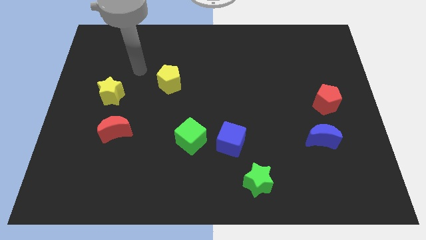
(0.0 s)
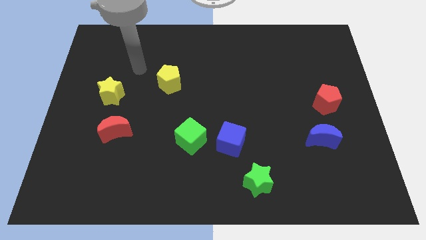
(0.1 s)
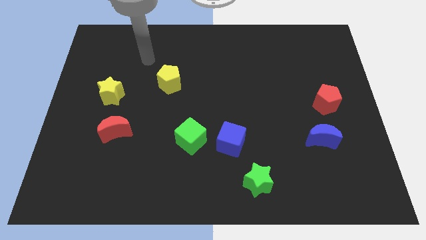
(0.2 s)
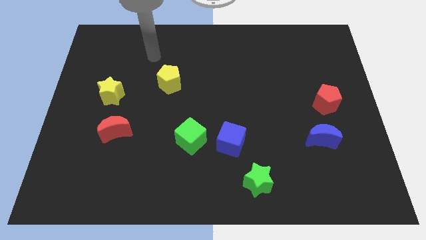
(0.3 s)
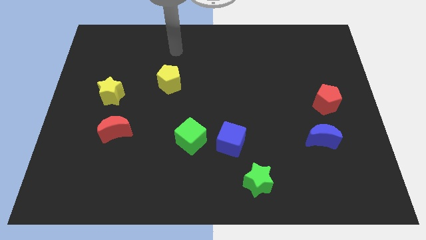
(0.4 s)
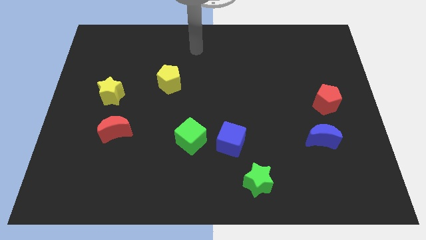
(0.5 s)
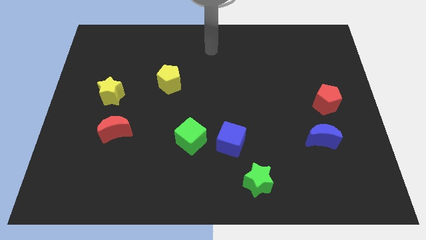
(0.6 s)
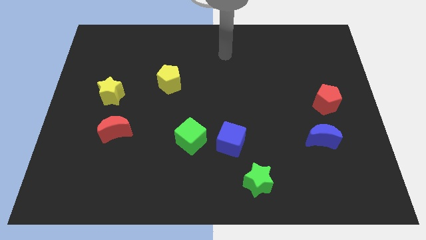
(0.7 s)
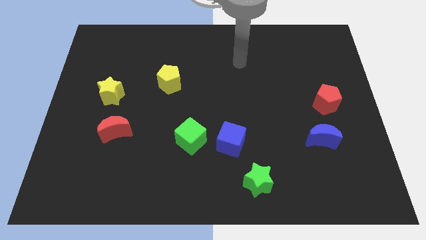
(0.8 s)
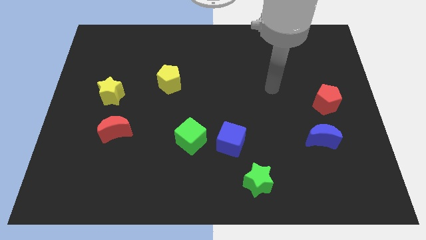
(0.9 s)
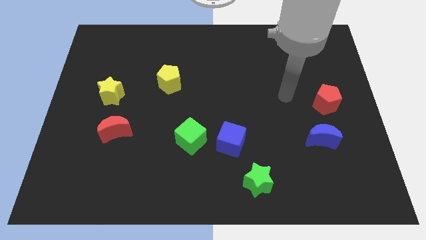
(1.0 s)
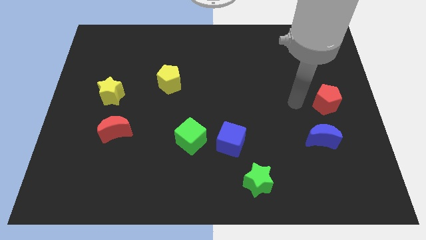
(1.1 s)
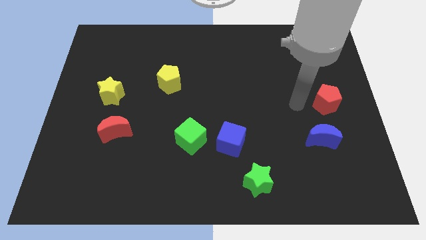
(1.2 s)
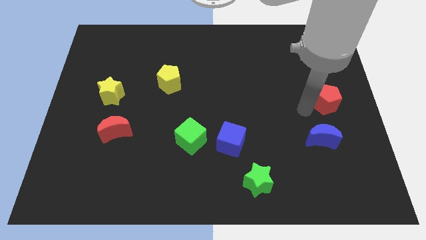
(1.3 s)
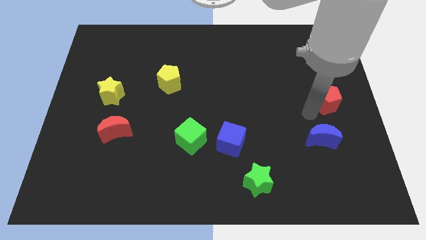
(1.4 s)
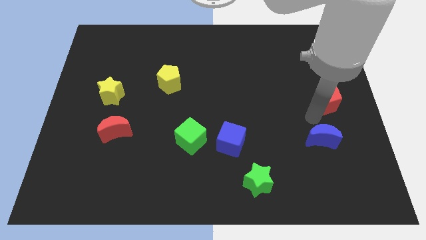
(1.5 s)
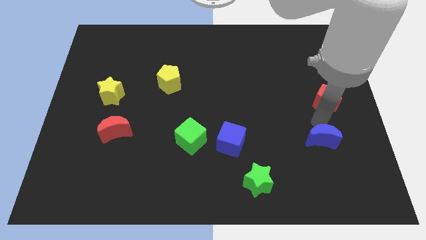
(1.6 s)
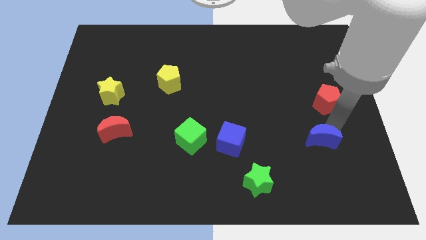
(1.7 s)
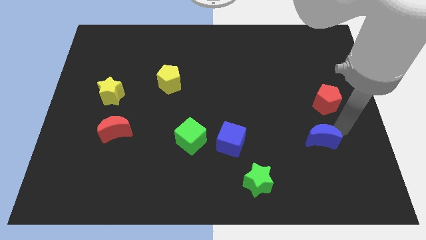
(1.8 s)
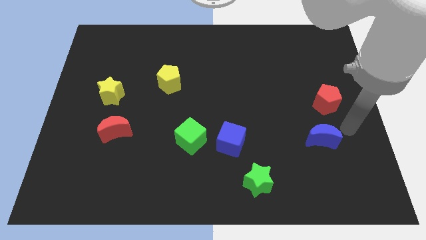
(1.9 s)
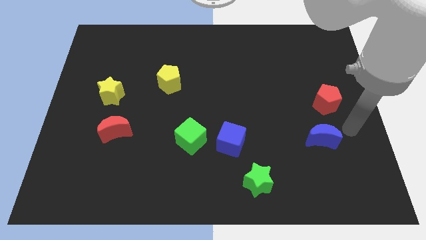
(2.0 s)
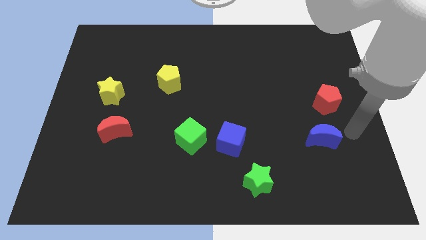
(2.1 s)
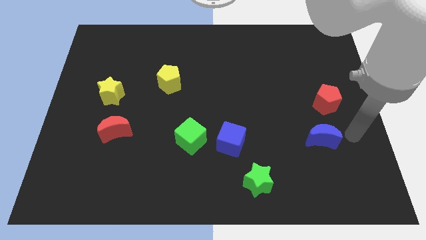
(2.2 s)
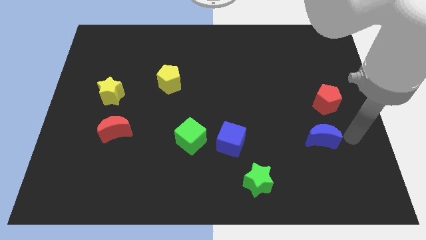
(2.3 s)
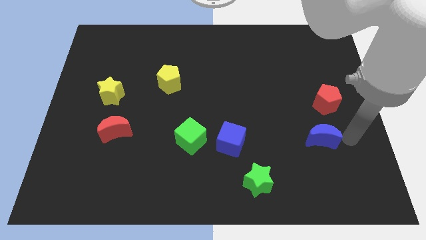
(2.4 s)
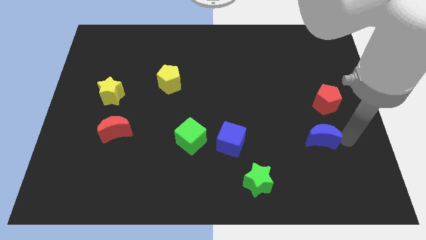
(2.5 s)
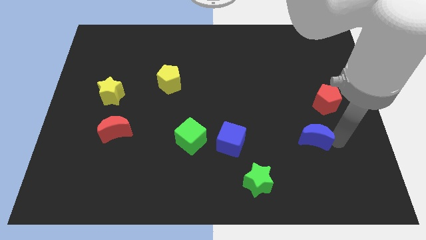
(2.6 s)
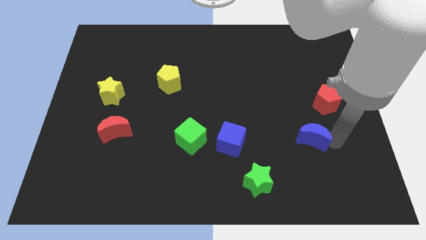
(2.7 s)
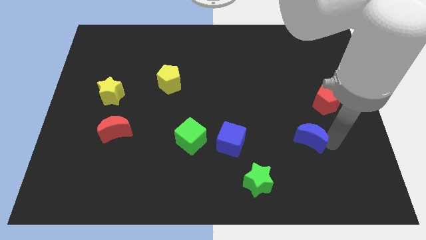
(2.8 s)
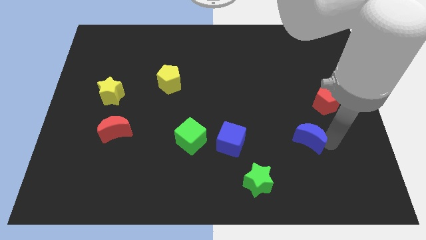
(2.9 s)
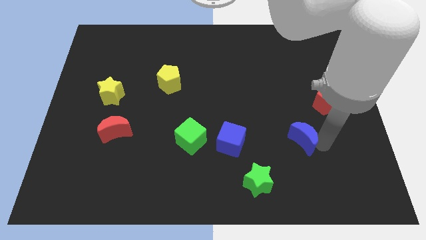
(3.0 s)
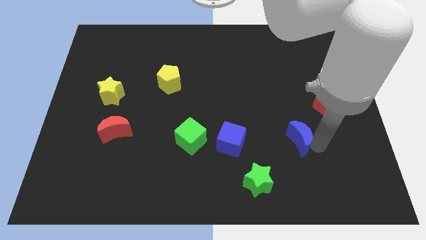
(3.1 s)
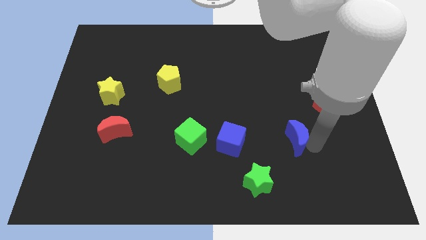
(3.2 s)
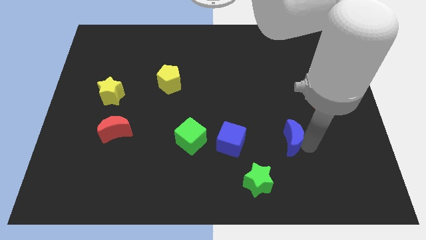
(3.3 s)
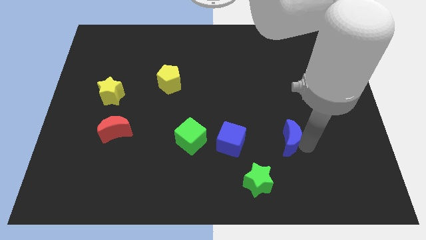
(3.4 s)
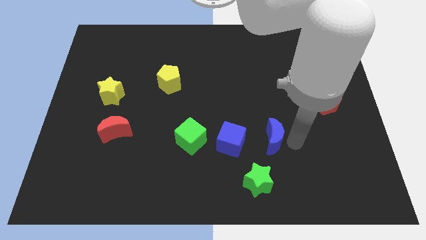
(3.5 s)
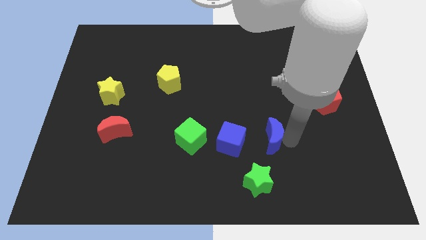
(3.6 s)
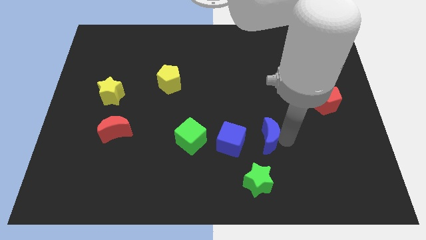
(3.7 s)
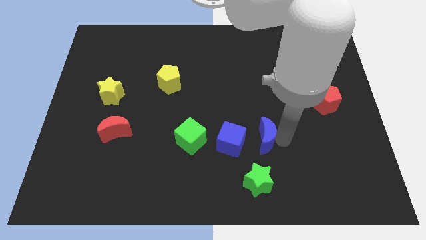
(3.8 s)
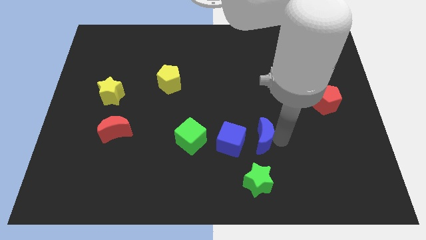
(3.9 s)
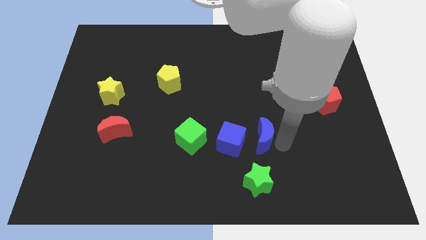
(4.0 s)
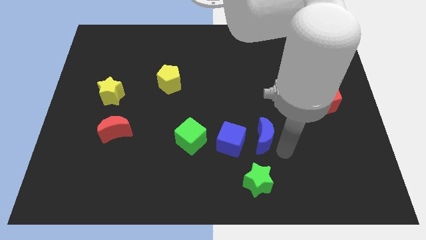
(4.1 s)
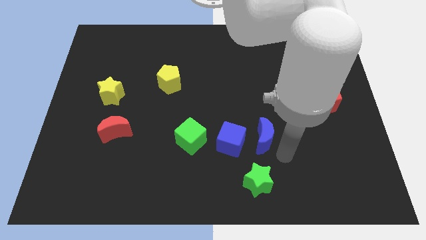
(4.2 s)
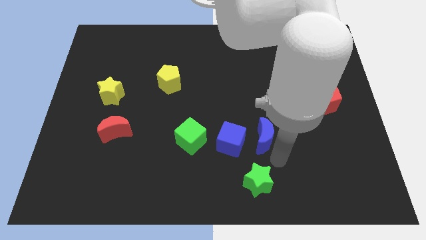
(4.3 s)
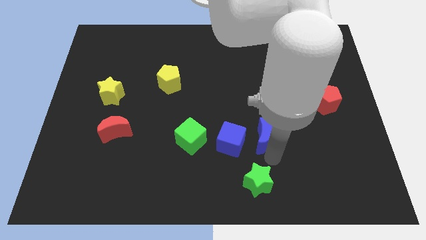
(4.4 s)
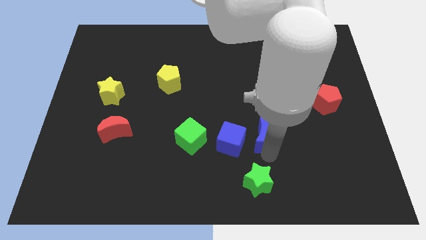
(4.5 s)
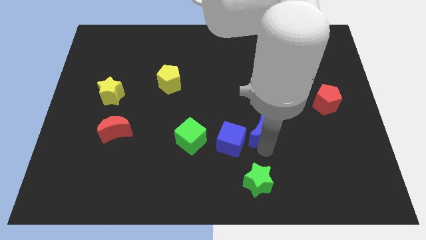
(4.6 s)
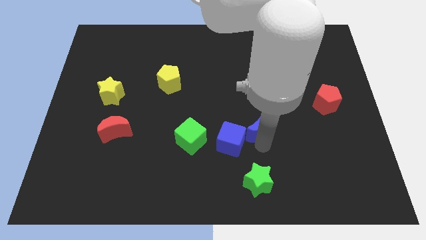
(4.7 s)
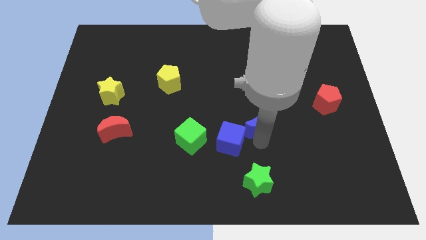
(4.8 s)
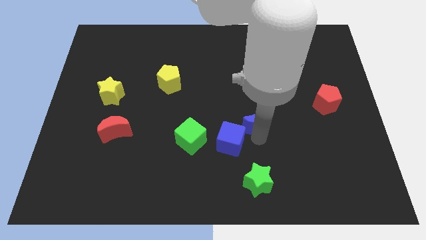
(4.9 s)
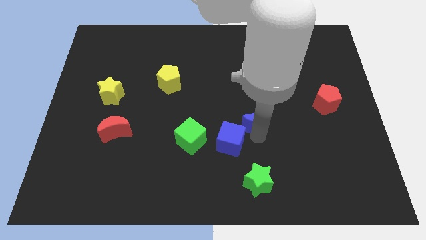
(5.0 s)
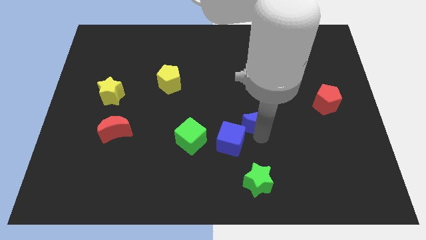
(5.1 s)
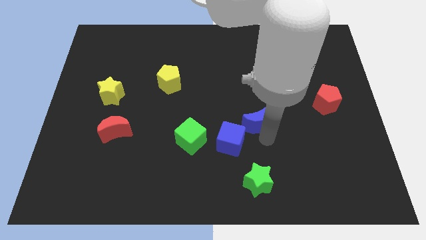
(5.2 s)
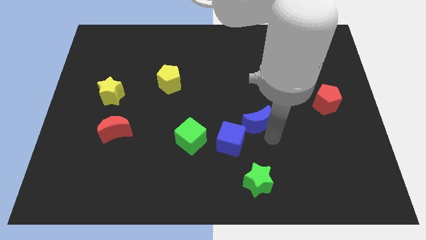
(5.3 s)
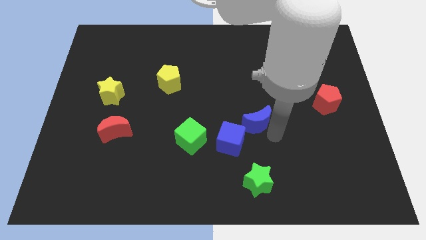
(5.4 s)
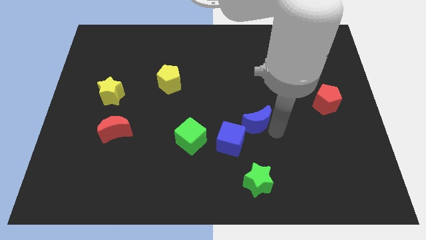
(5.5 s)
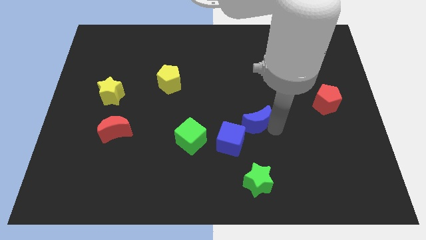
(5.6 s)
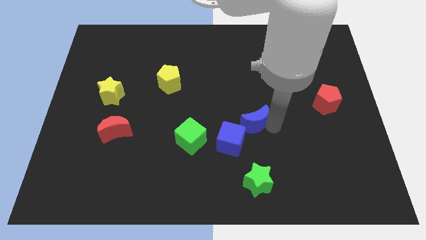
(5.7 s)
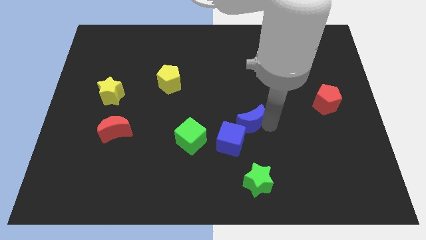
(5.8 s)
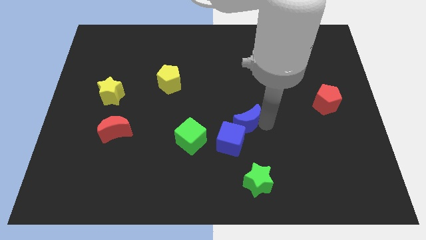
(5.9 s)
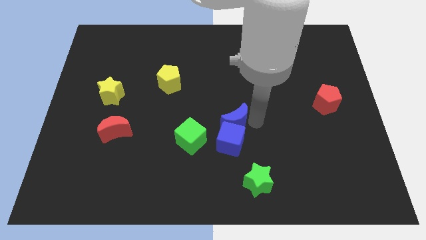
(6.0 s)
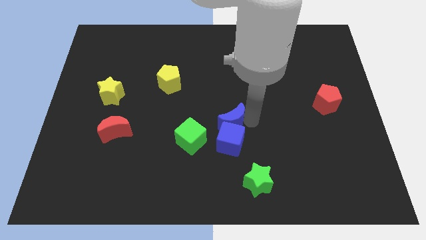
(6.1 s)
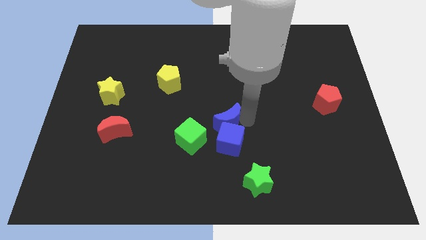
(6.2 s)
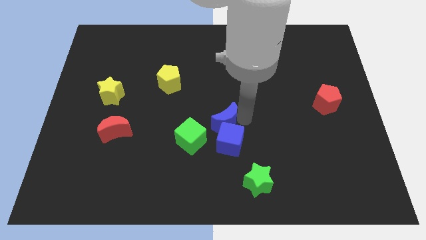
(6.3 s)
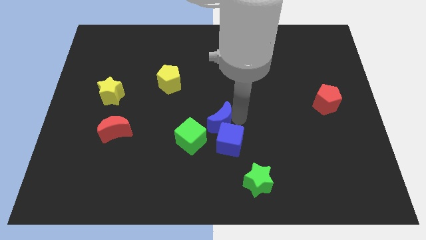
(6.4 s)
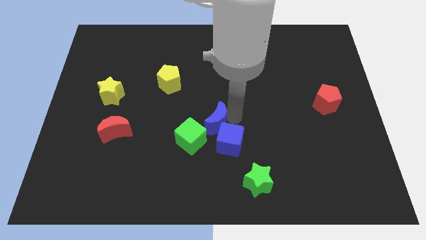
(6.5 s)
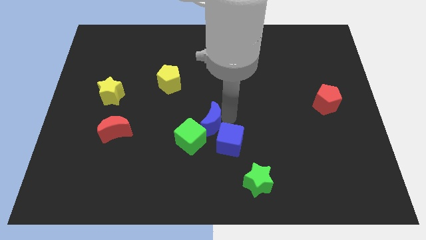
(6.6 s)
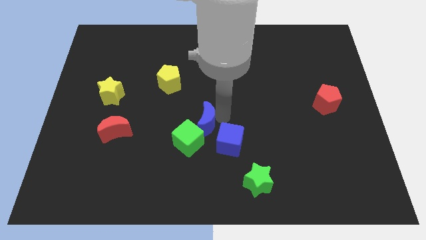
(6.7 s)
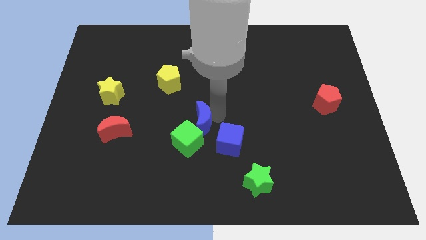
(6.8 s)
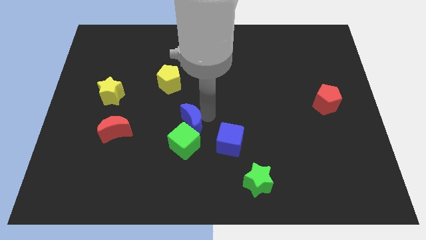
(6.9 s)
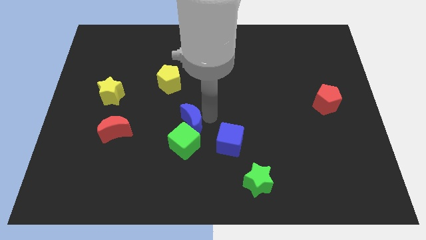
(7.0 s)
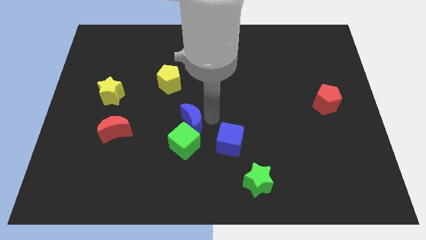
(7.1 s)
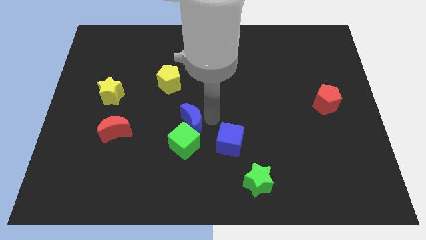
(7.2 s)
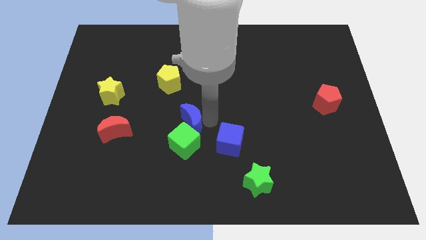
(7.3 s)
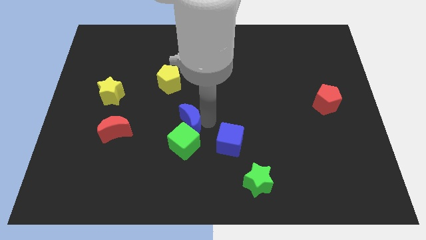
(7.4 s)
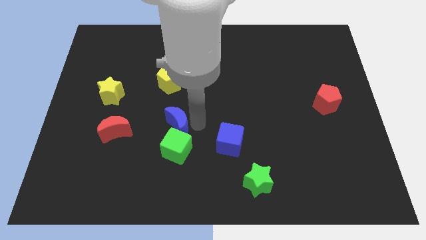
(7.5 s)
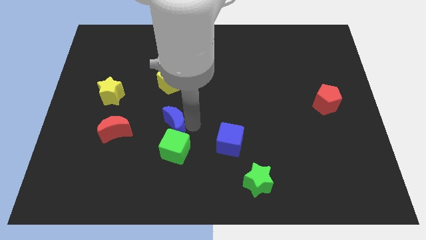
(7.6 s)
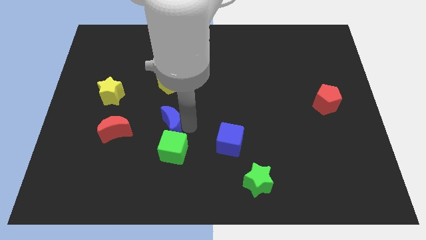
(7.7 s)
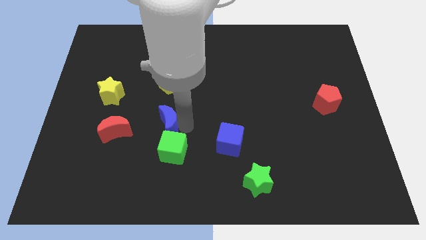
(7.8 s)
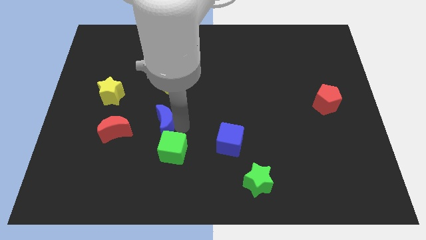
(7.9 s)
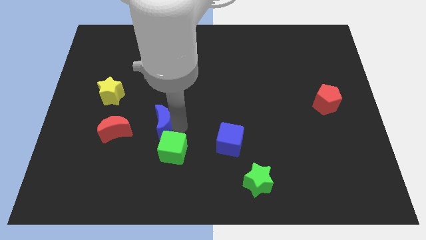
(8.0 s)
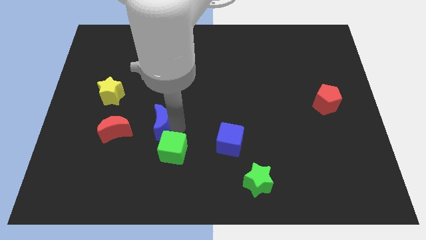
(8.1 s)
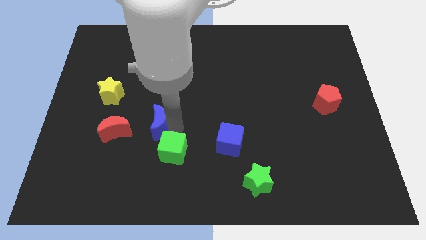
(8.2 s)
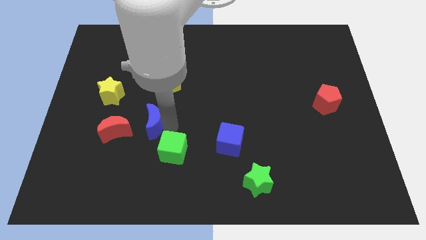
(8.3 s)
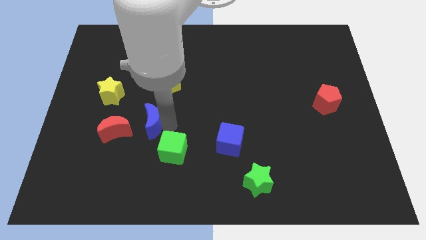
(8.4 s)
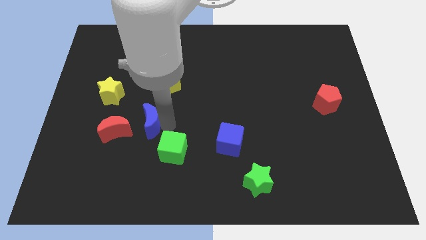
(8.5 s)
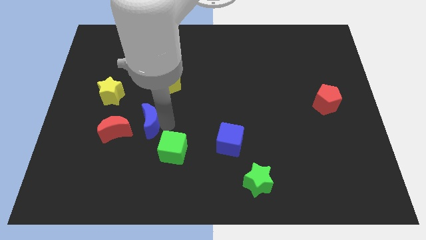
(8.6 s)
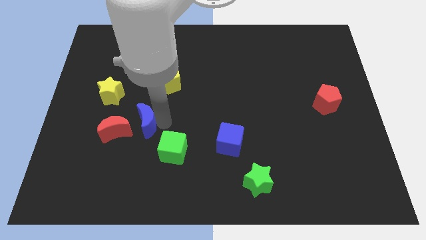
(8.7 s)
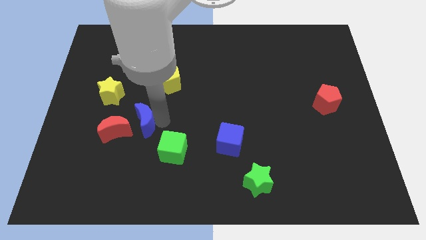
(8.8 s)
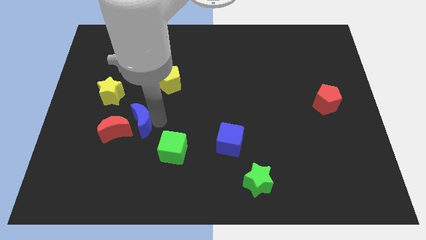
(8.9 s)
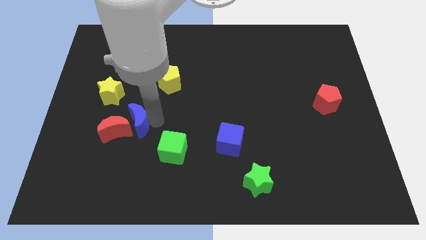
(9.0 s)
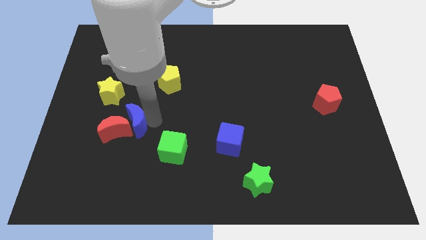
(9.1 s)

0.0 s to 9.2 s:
move the blue moon close to the red moon
